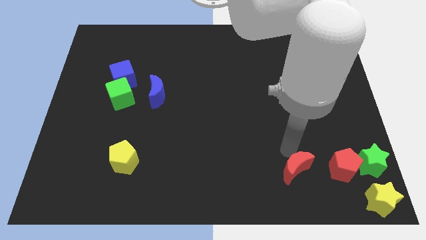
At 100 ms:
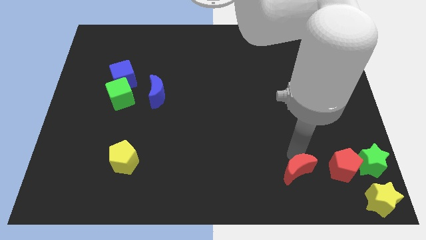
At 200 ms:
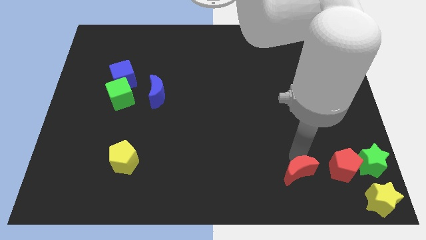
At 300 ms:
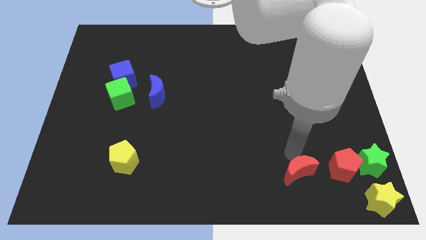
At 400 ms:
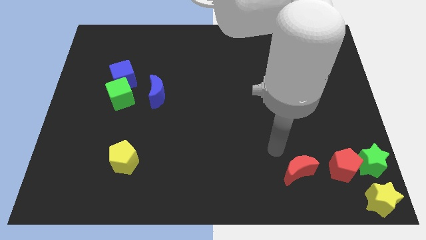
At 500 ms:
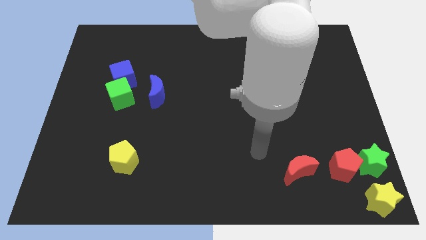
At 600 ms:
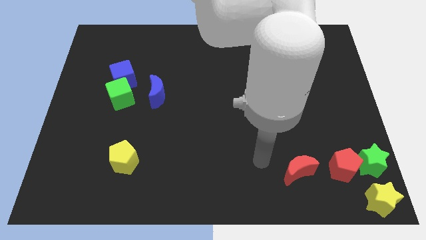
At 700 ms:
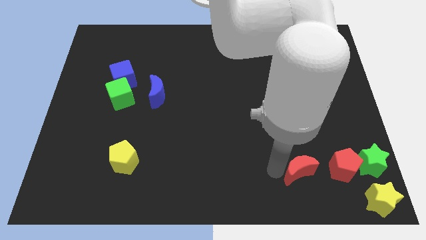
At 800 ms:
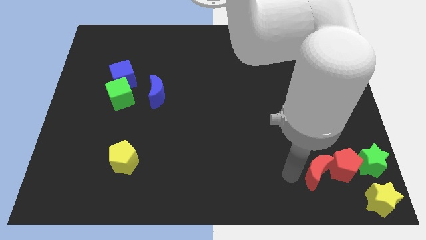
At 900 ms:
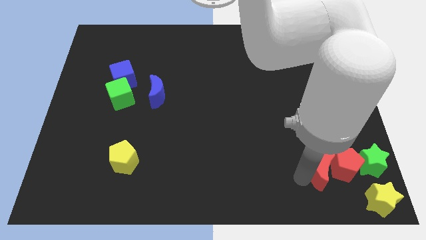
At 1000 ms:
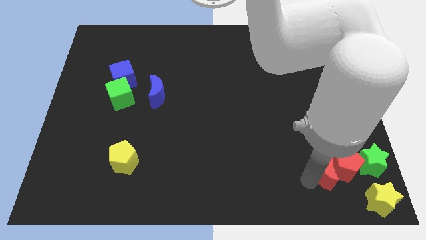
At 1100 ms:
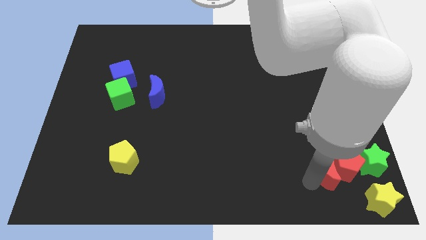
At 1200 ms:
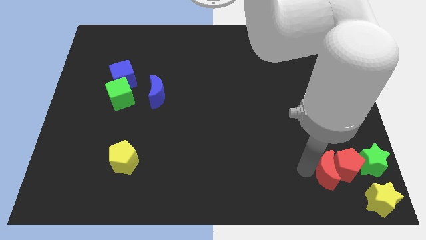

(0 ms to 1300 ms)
push the red crescent into red pentagon

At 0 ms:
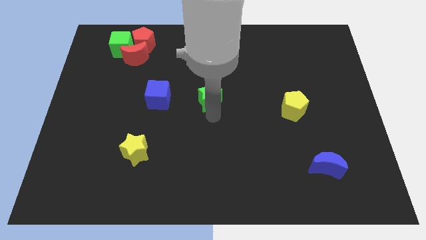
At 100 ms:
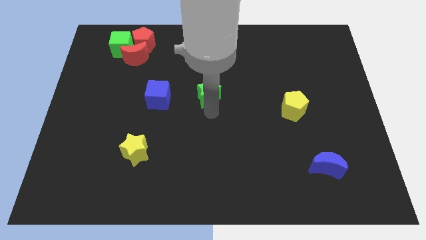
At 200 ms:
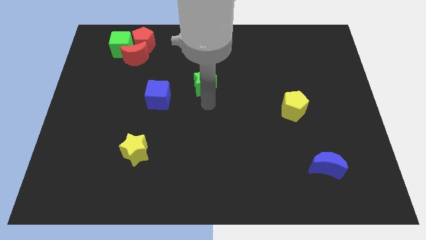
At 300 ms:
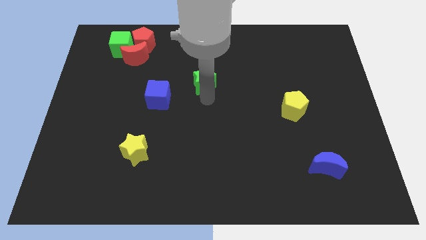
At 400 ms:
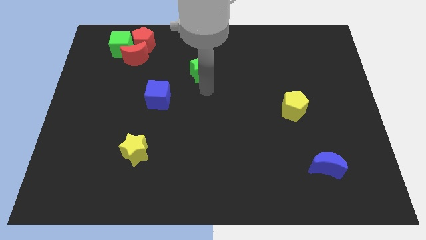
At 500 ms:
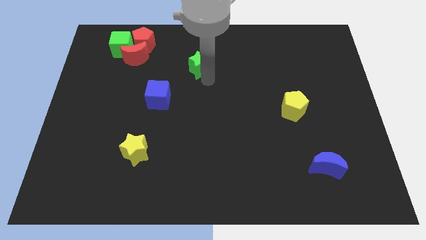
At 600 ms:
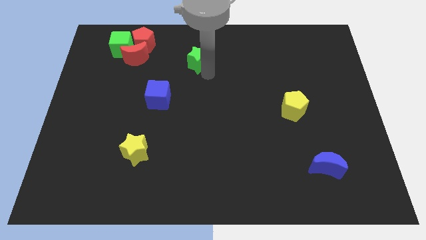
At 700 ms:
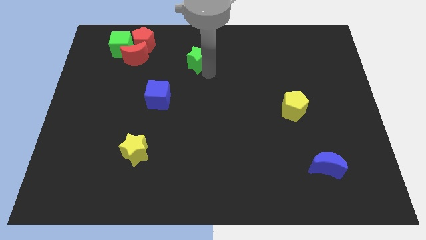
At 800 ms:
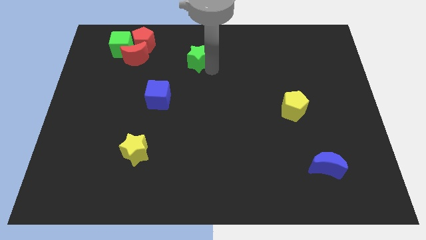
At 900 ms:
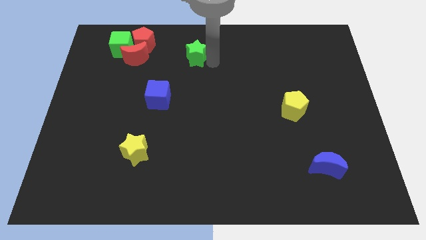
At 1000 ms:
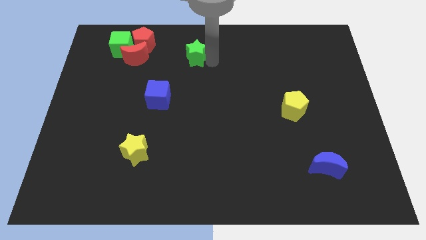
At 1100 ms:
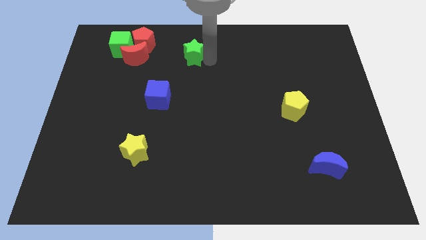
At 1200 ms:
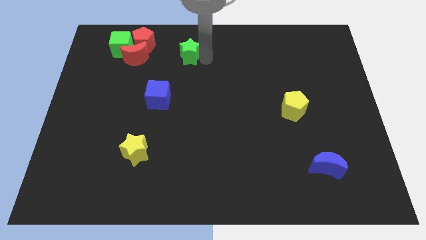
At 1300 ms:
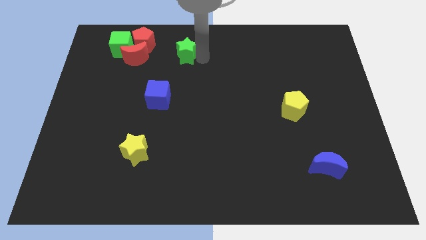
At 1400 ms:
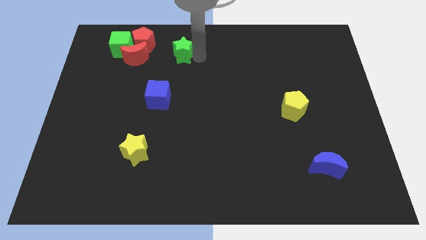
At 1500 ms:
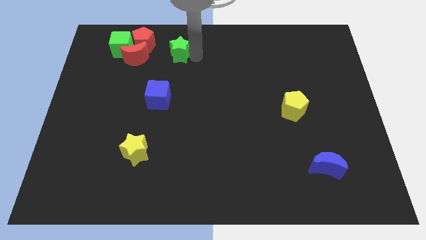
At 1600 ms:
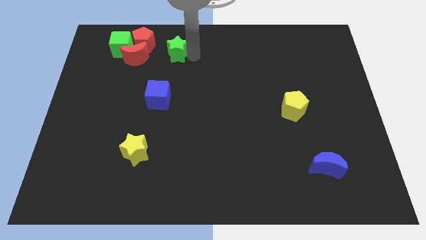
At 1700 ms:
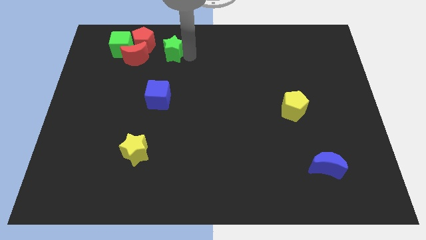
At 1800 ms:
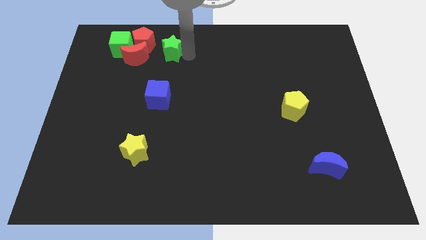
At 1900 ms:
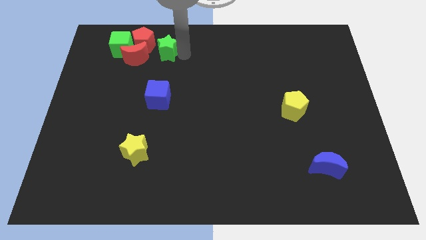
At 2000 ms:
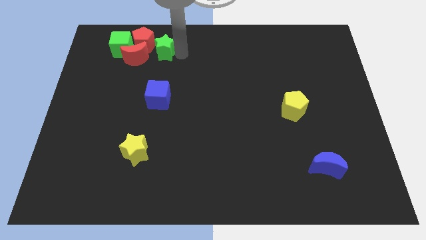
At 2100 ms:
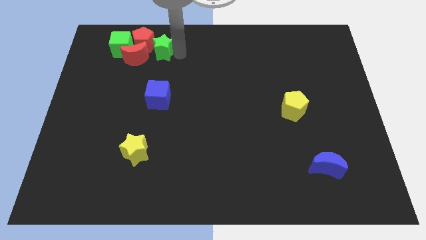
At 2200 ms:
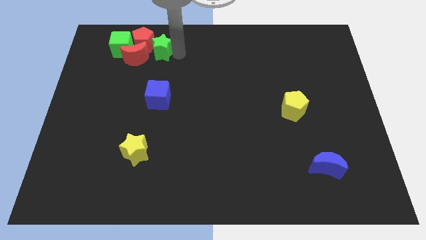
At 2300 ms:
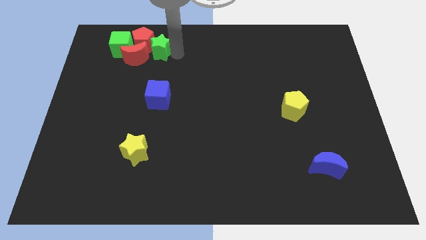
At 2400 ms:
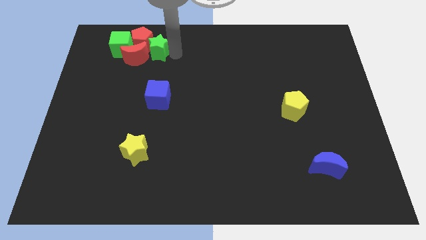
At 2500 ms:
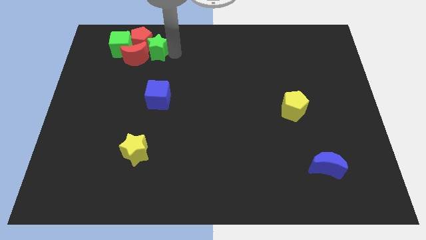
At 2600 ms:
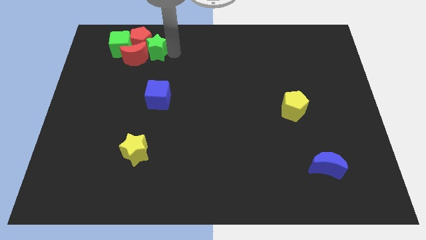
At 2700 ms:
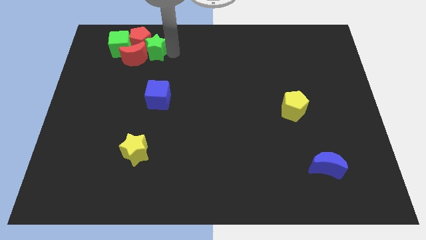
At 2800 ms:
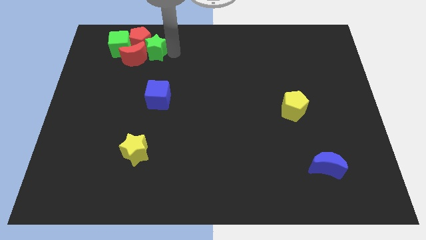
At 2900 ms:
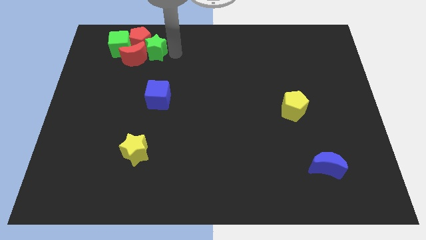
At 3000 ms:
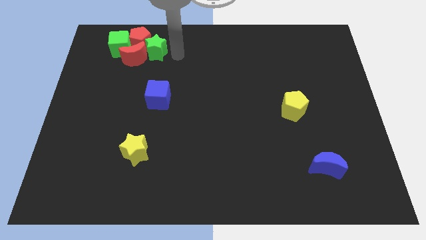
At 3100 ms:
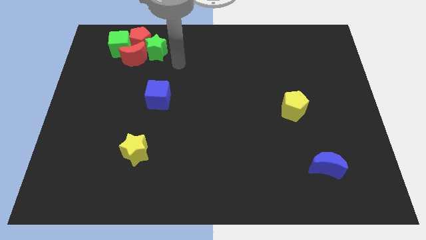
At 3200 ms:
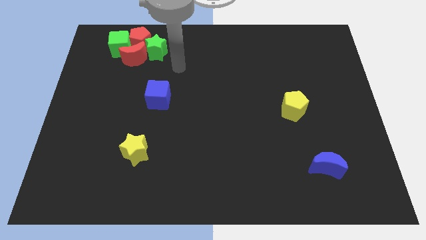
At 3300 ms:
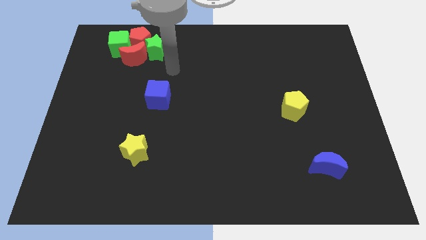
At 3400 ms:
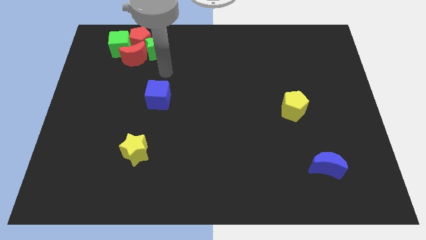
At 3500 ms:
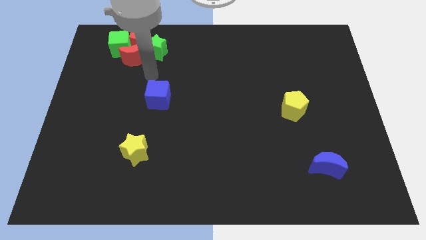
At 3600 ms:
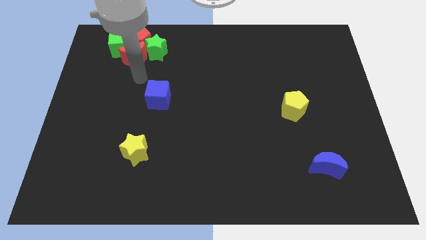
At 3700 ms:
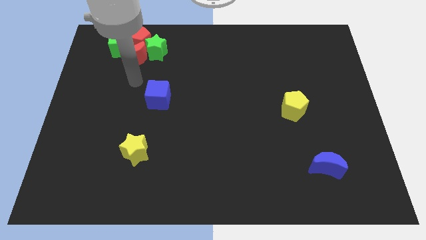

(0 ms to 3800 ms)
move the green star to the beside red moon

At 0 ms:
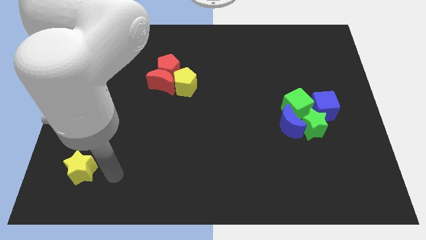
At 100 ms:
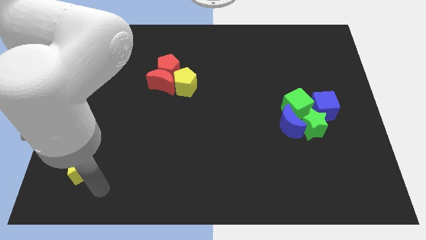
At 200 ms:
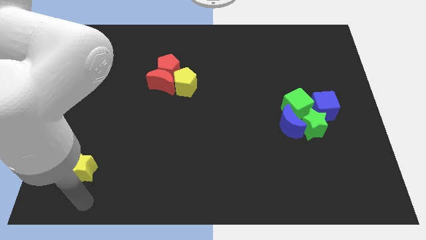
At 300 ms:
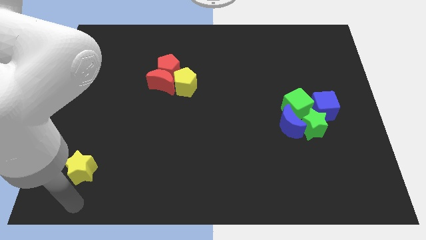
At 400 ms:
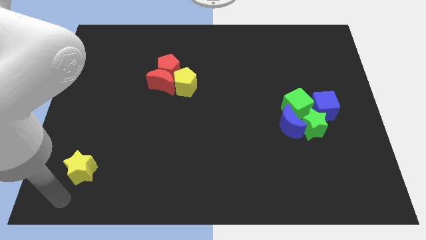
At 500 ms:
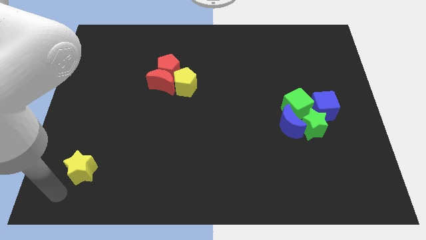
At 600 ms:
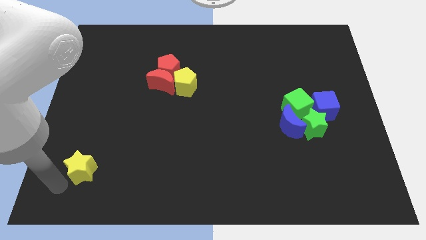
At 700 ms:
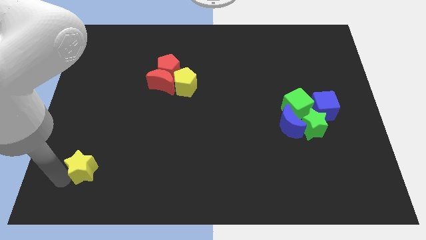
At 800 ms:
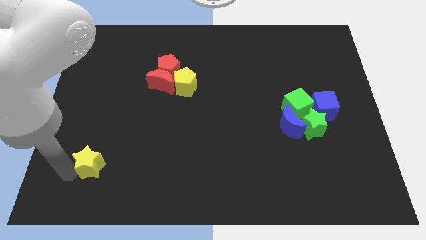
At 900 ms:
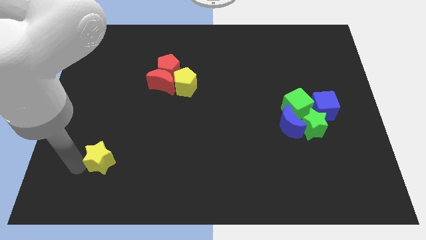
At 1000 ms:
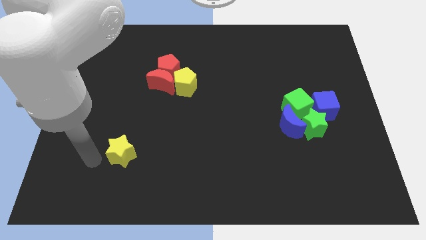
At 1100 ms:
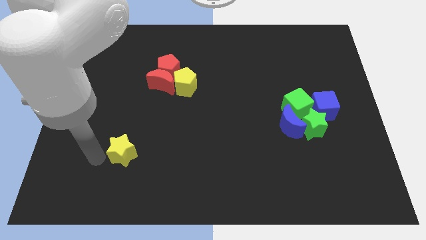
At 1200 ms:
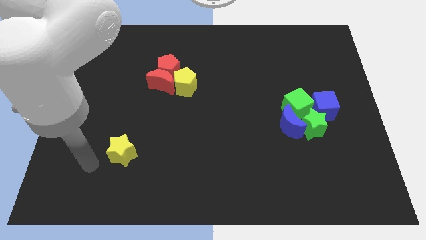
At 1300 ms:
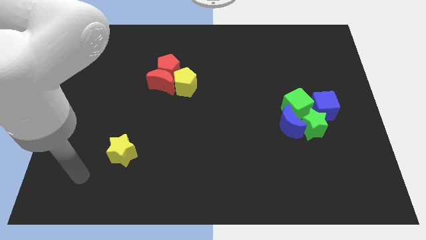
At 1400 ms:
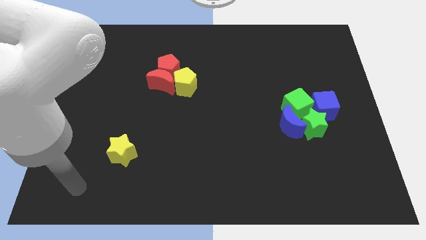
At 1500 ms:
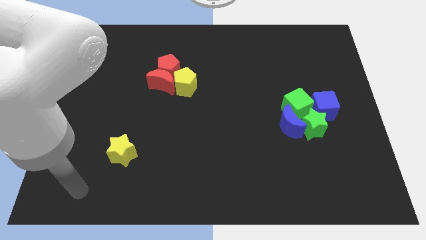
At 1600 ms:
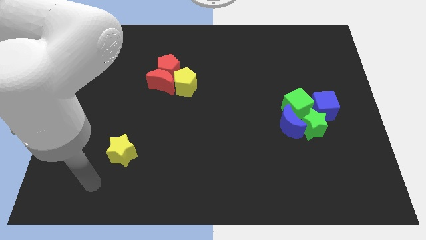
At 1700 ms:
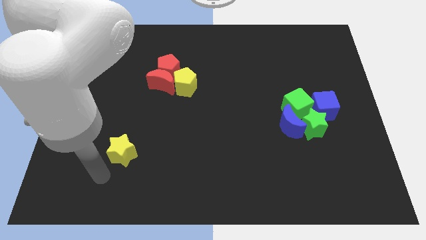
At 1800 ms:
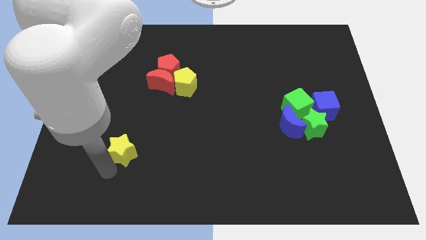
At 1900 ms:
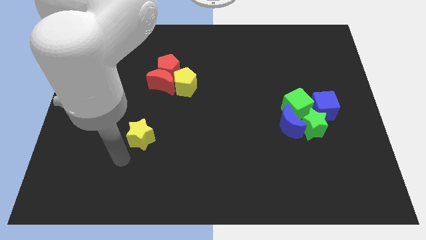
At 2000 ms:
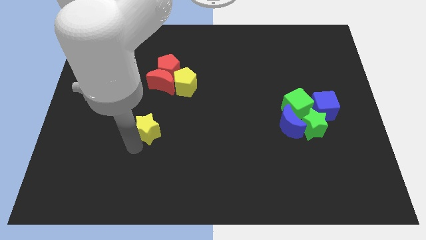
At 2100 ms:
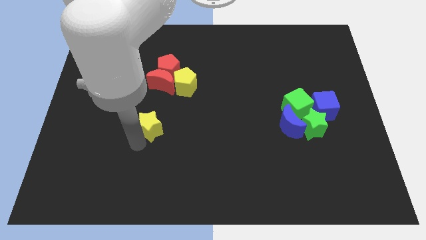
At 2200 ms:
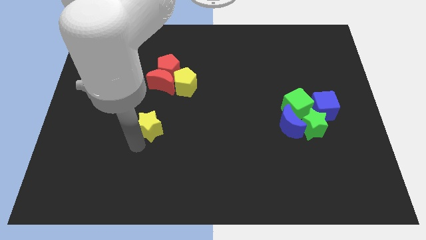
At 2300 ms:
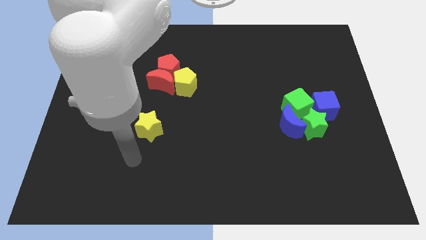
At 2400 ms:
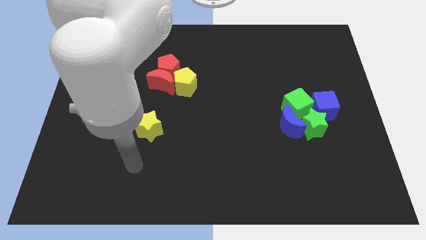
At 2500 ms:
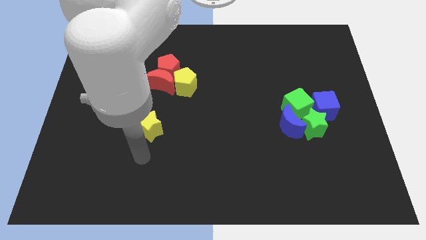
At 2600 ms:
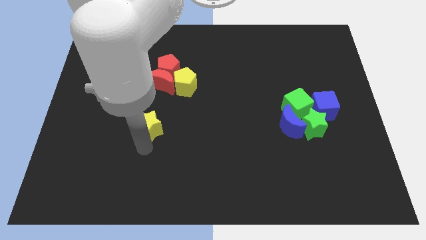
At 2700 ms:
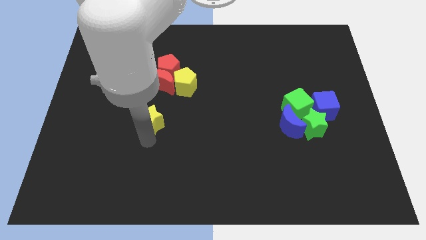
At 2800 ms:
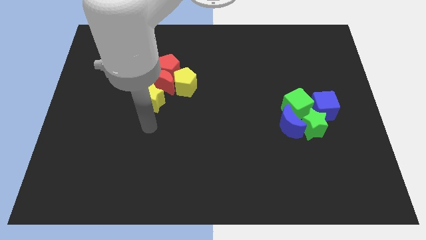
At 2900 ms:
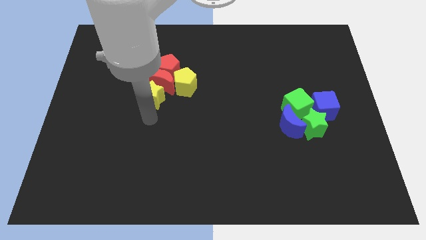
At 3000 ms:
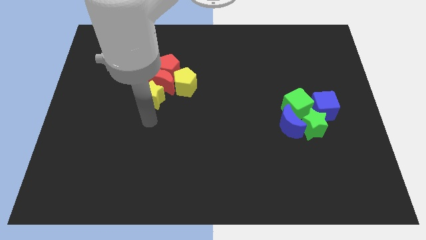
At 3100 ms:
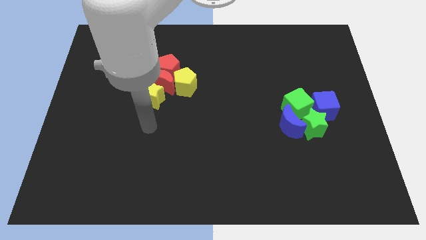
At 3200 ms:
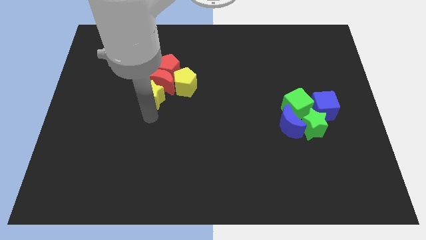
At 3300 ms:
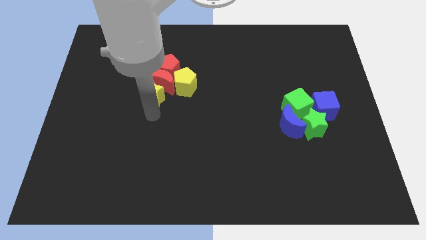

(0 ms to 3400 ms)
move the yellow star to the left of the red moon

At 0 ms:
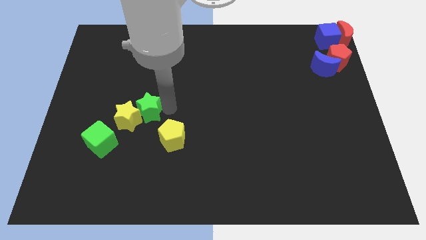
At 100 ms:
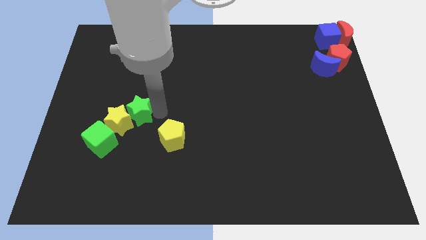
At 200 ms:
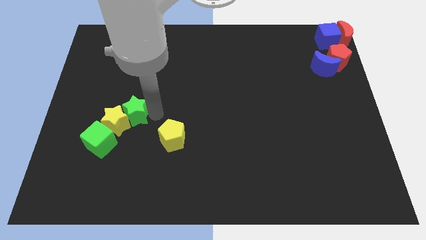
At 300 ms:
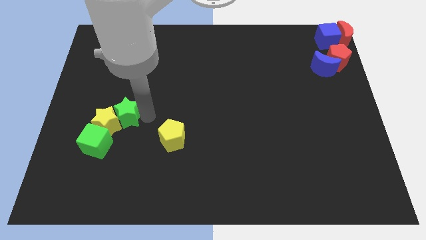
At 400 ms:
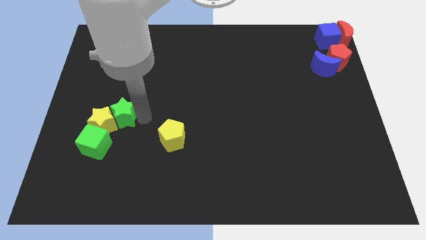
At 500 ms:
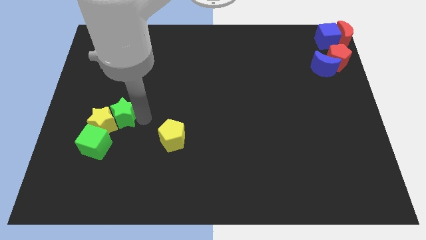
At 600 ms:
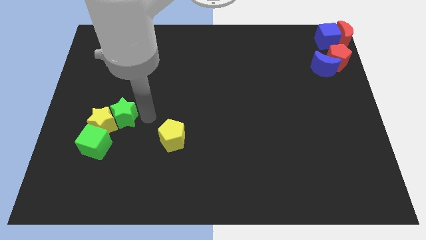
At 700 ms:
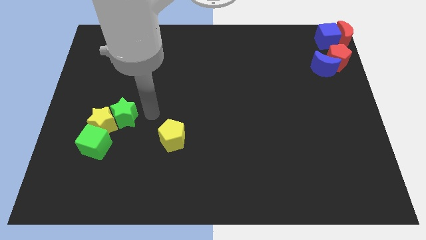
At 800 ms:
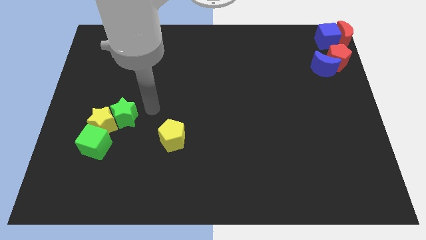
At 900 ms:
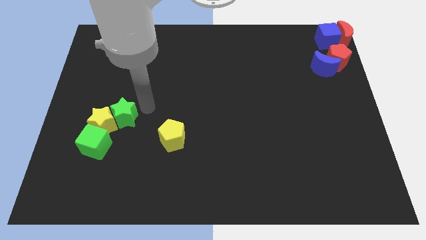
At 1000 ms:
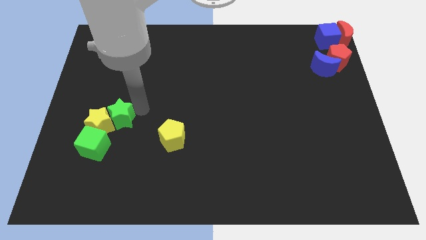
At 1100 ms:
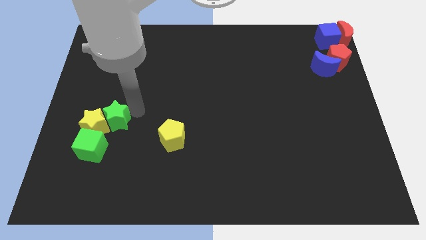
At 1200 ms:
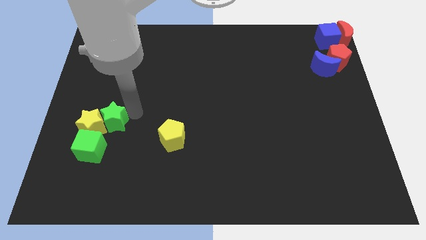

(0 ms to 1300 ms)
push the green star into the yellow star
